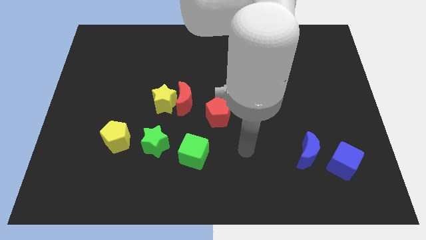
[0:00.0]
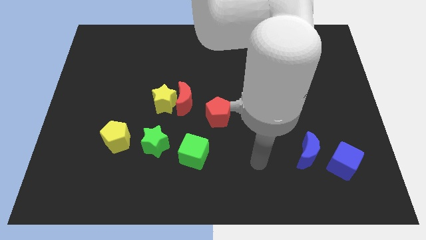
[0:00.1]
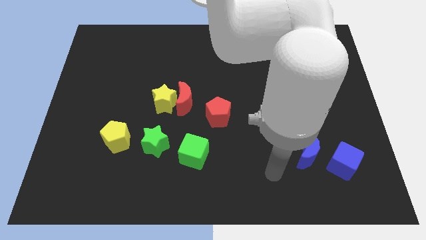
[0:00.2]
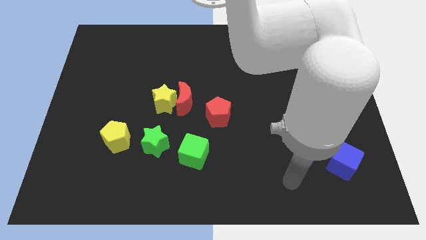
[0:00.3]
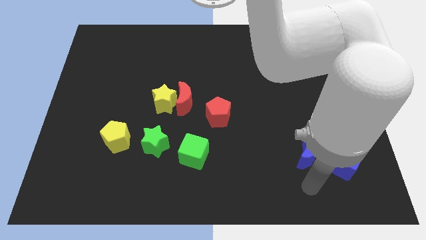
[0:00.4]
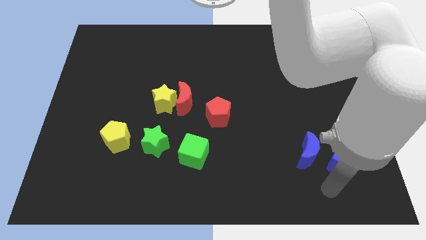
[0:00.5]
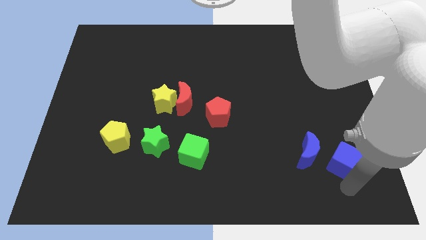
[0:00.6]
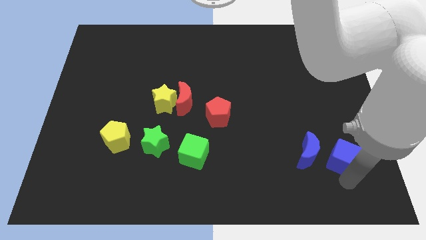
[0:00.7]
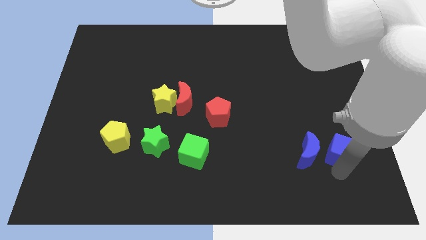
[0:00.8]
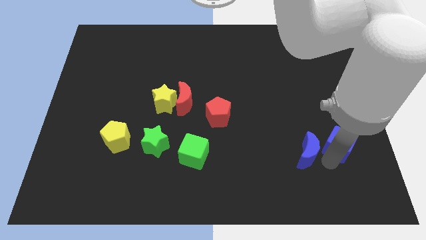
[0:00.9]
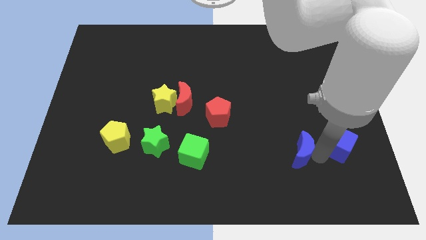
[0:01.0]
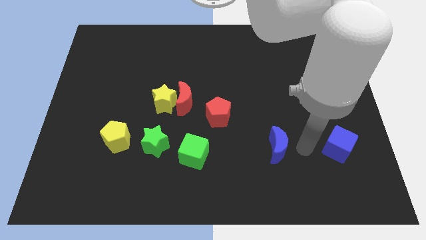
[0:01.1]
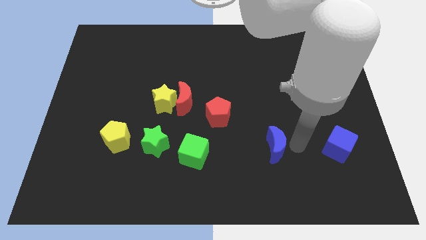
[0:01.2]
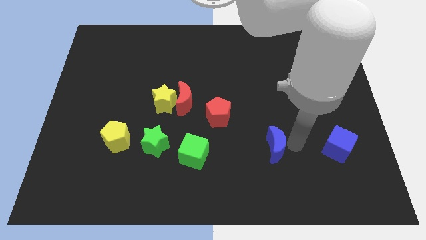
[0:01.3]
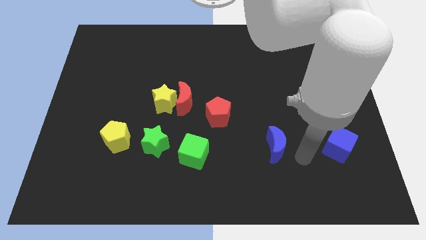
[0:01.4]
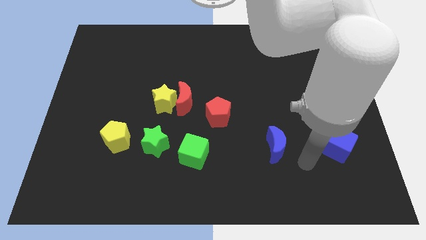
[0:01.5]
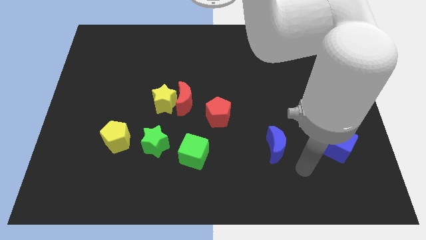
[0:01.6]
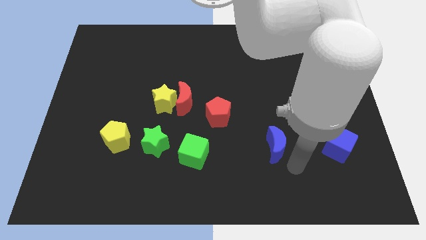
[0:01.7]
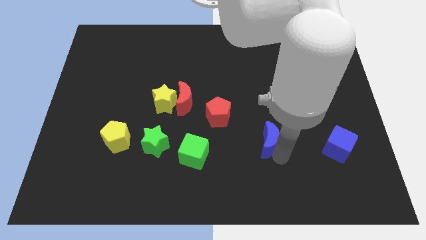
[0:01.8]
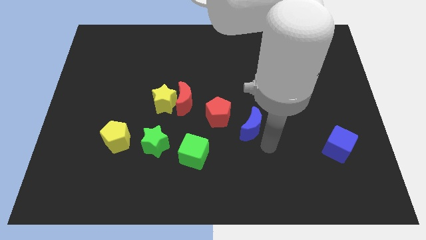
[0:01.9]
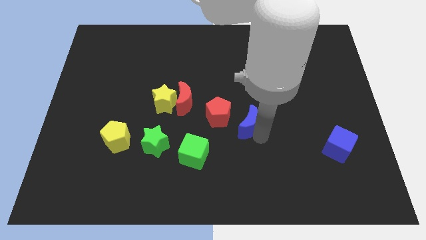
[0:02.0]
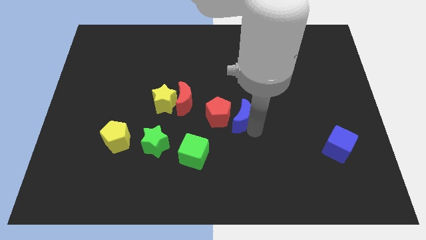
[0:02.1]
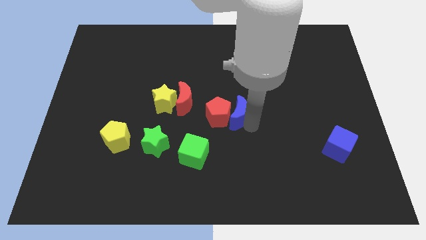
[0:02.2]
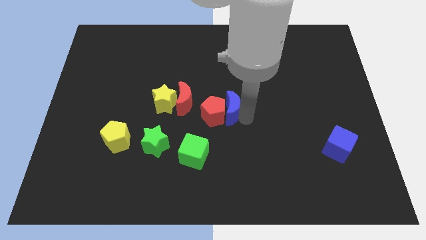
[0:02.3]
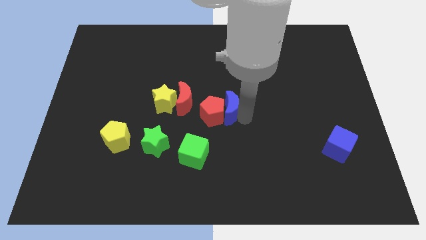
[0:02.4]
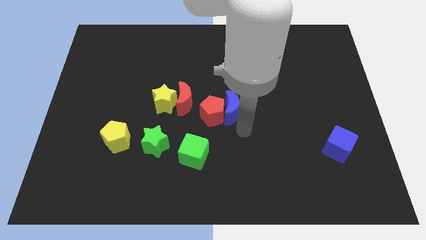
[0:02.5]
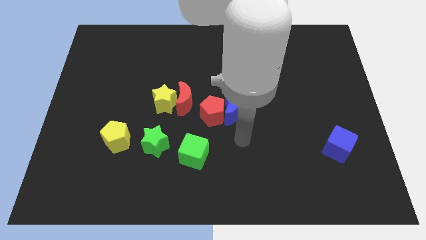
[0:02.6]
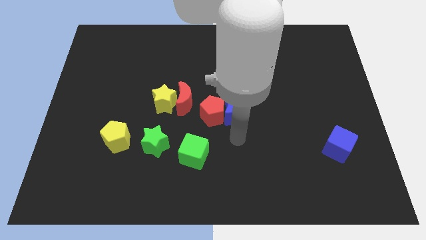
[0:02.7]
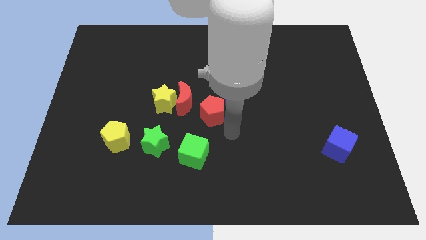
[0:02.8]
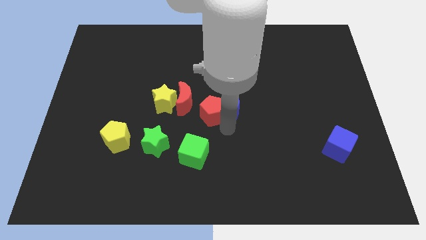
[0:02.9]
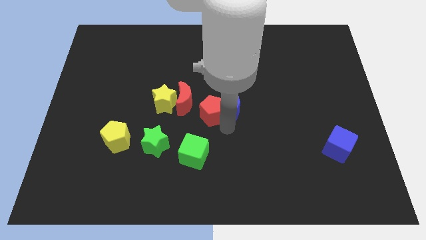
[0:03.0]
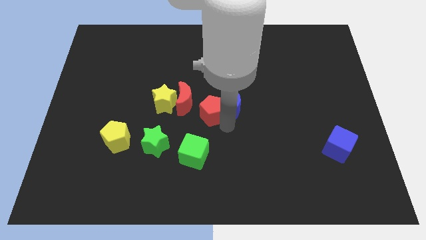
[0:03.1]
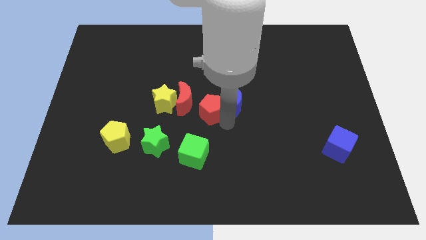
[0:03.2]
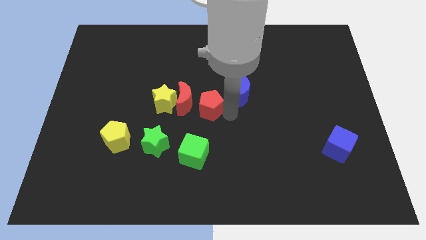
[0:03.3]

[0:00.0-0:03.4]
move the blue crescent at the right side of the red pentagon

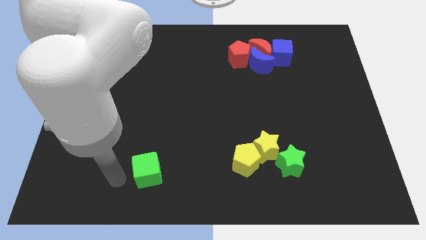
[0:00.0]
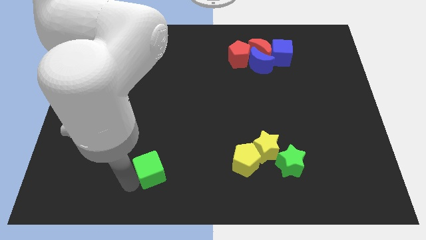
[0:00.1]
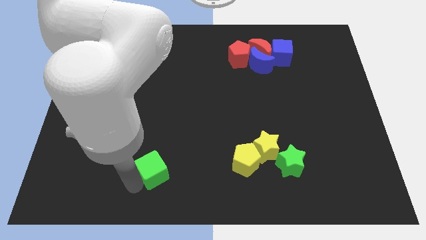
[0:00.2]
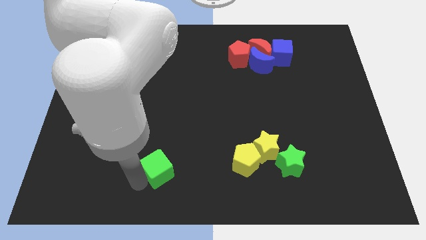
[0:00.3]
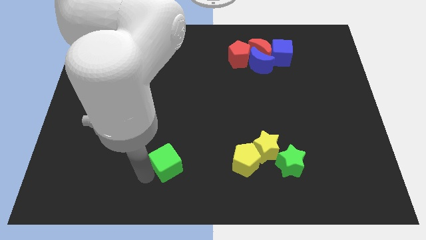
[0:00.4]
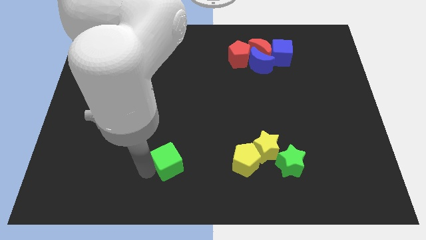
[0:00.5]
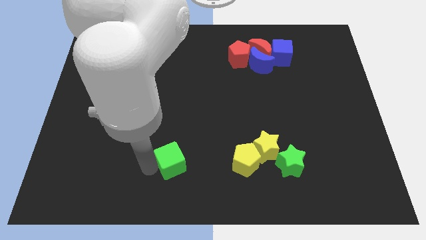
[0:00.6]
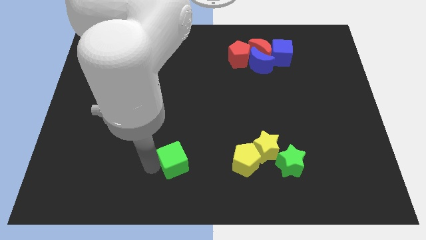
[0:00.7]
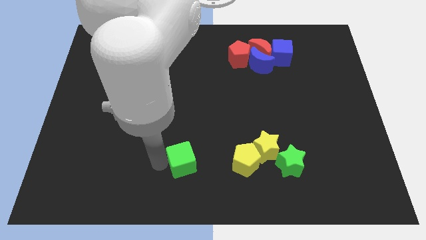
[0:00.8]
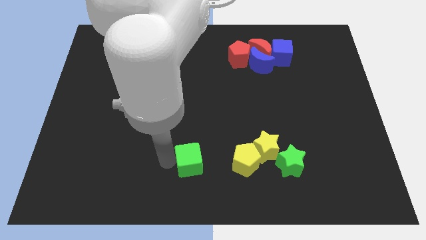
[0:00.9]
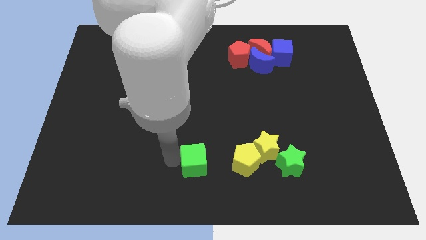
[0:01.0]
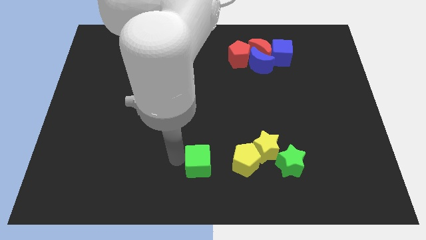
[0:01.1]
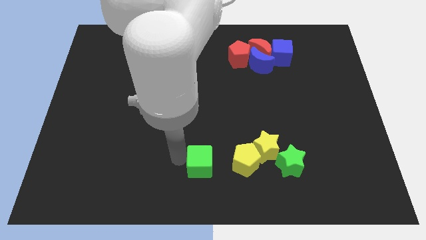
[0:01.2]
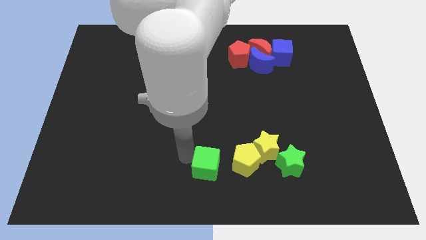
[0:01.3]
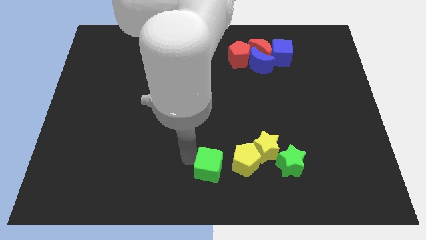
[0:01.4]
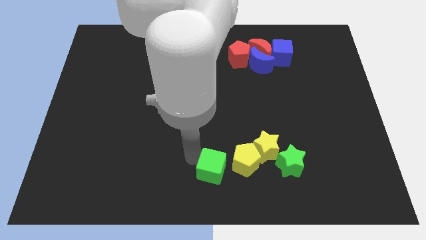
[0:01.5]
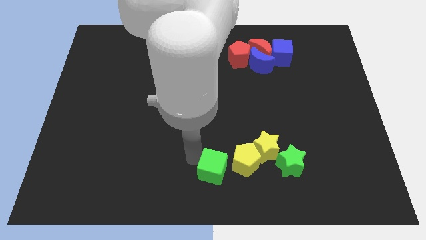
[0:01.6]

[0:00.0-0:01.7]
place the green cube to the left of the yellow pentagon

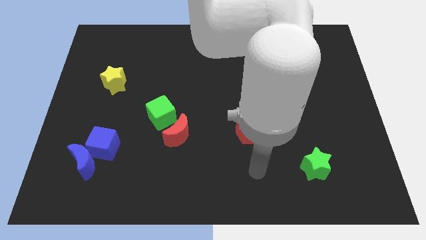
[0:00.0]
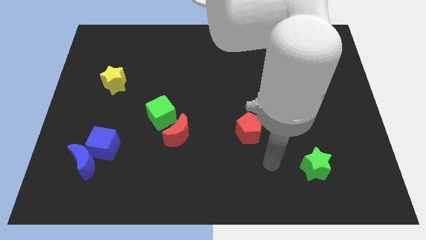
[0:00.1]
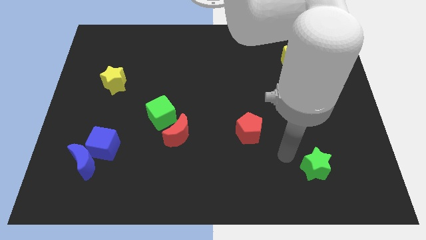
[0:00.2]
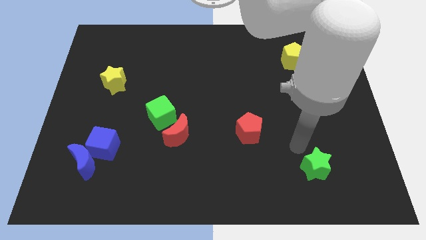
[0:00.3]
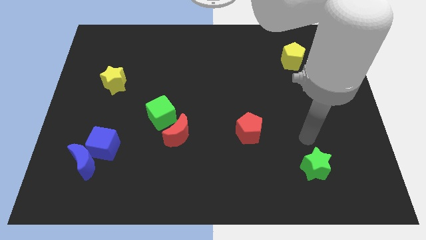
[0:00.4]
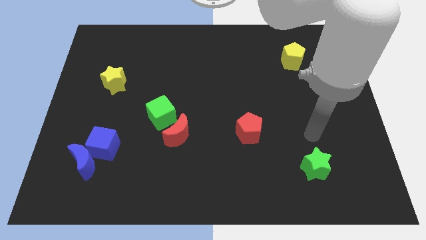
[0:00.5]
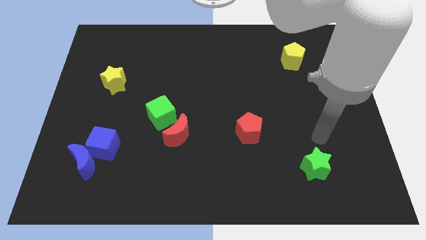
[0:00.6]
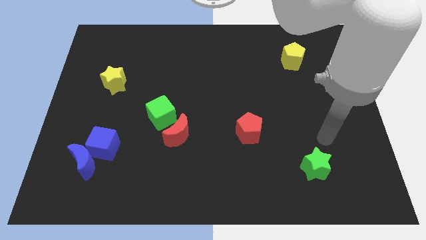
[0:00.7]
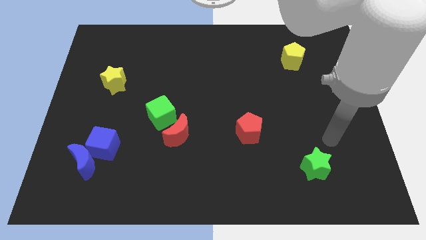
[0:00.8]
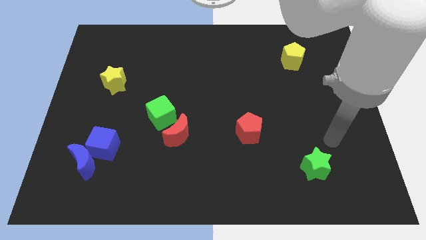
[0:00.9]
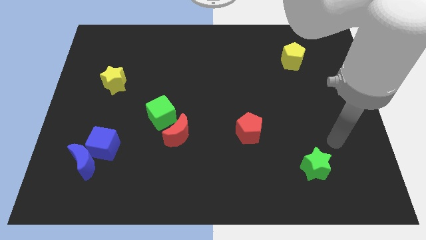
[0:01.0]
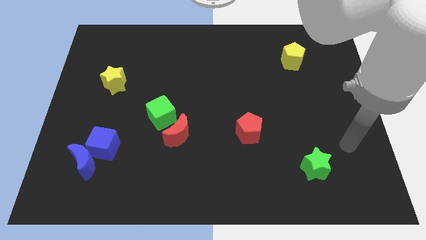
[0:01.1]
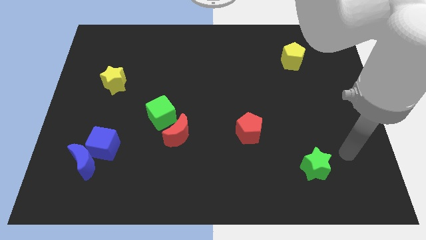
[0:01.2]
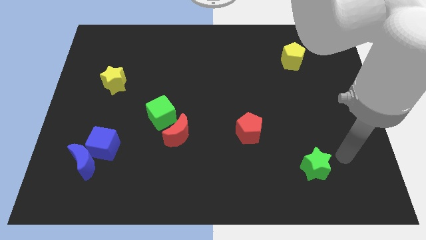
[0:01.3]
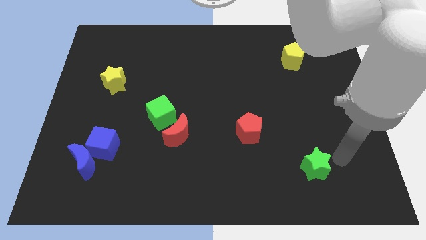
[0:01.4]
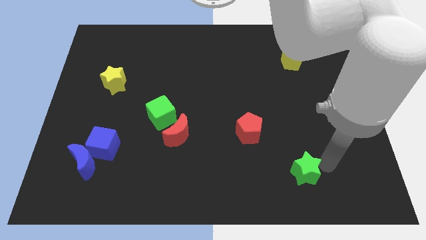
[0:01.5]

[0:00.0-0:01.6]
move your arm at the top right side of the green star

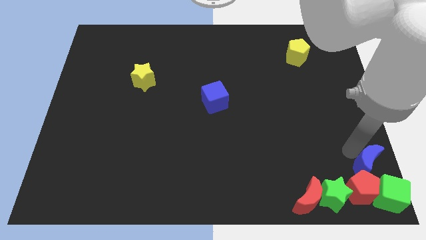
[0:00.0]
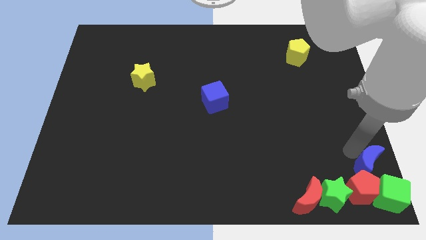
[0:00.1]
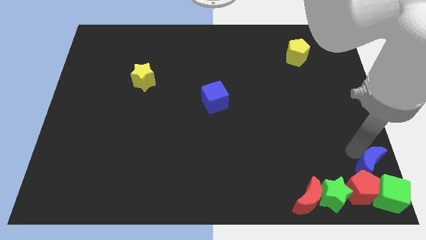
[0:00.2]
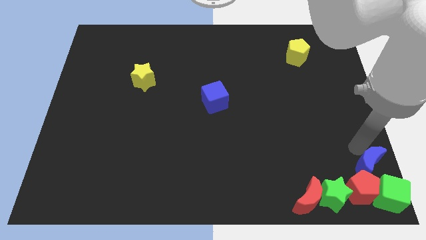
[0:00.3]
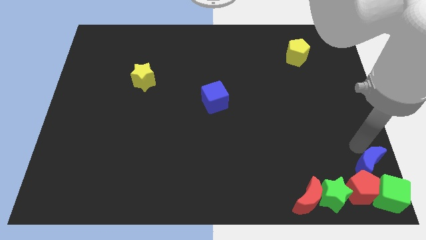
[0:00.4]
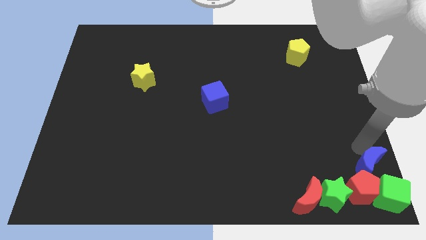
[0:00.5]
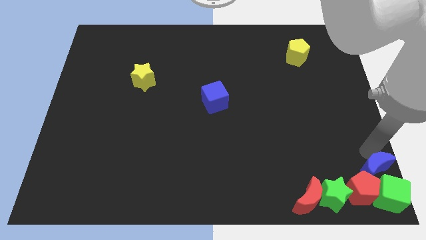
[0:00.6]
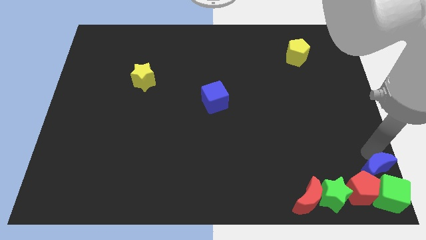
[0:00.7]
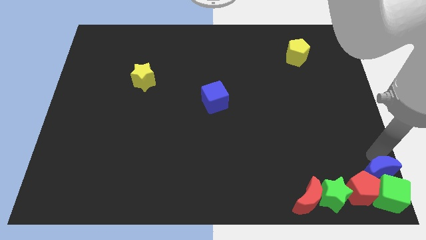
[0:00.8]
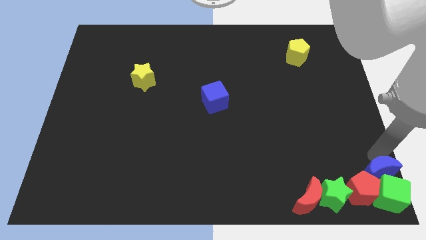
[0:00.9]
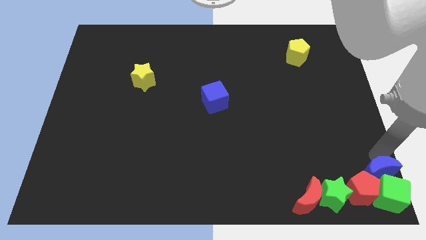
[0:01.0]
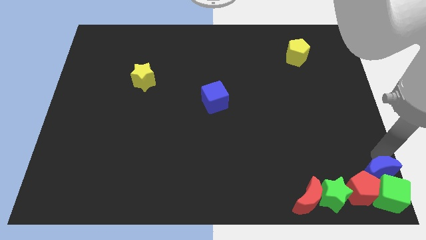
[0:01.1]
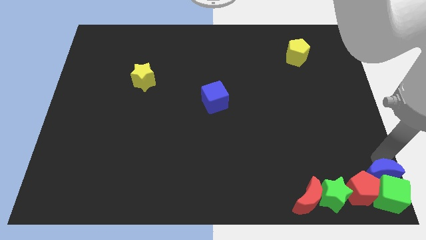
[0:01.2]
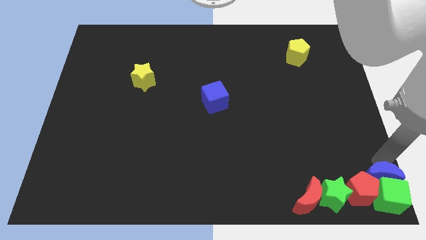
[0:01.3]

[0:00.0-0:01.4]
move blue moon into green cube

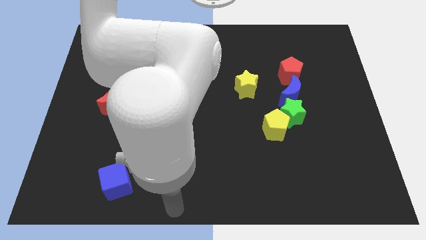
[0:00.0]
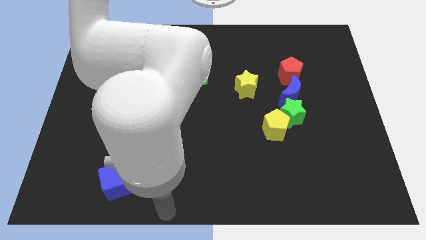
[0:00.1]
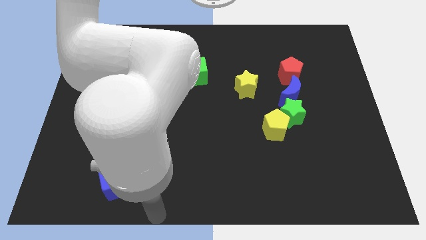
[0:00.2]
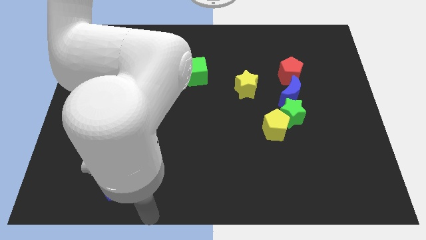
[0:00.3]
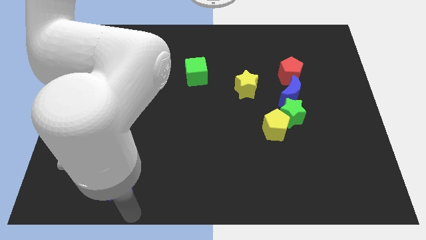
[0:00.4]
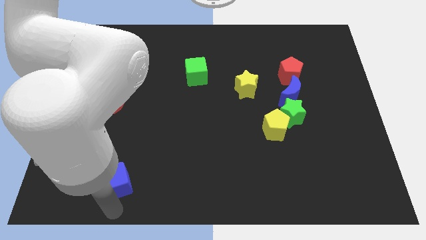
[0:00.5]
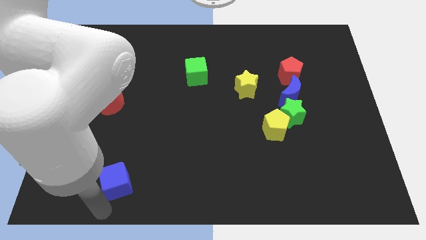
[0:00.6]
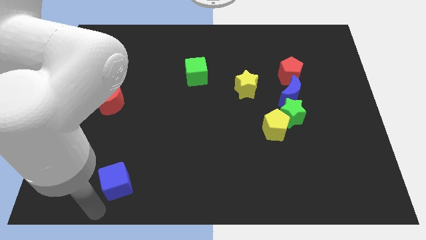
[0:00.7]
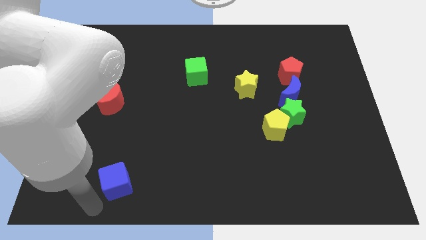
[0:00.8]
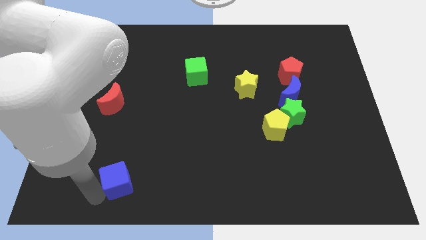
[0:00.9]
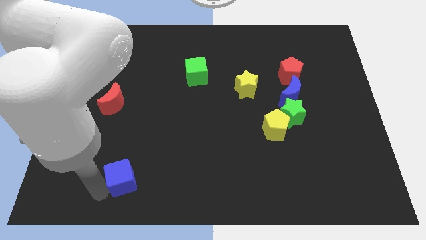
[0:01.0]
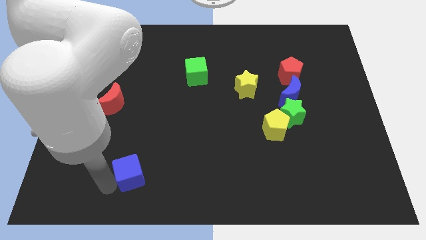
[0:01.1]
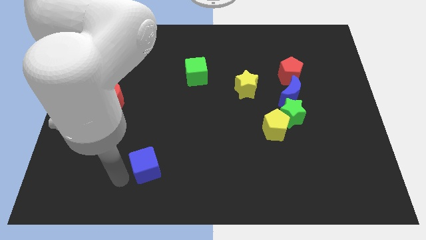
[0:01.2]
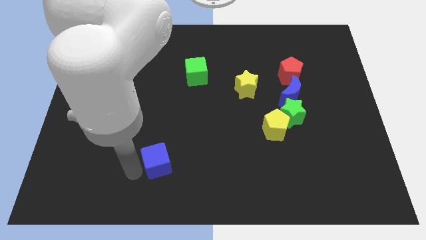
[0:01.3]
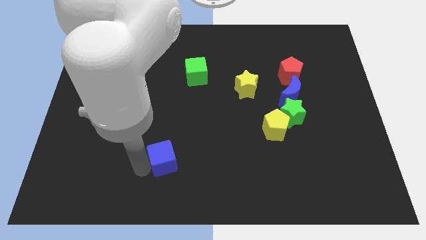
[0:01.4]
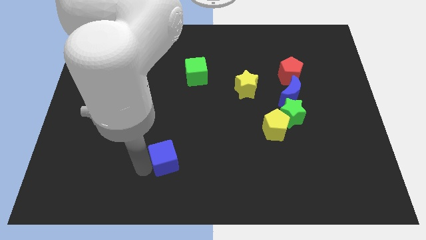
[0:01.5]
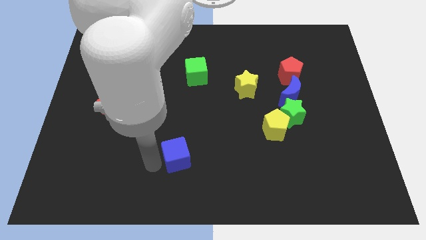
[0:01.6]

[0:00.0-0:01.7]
push the blue cube towards the center
